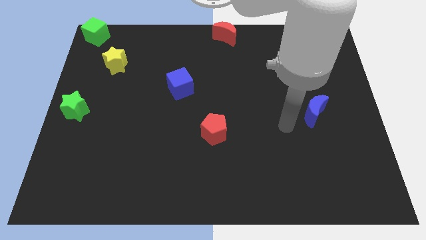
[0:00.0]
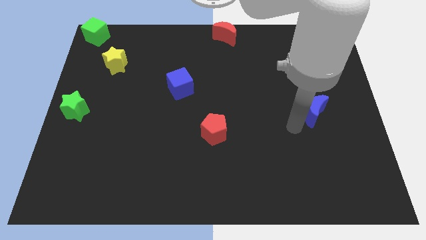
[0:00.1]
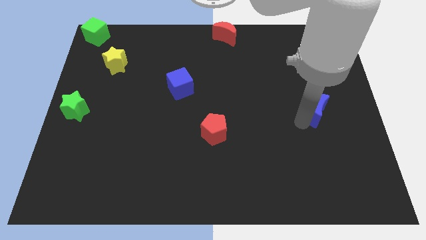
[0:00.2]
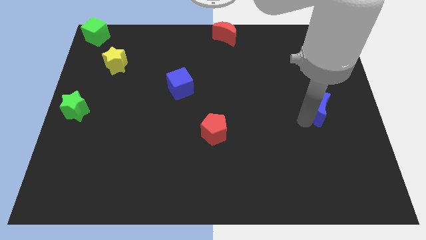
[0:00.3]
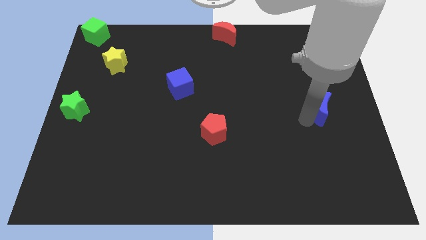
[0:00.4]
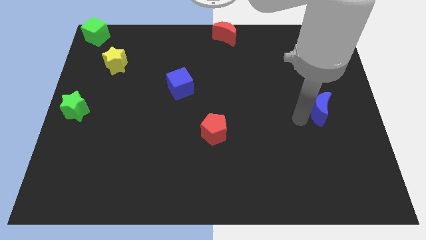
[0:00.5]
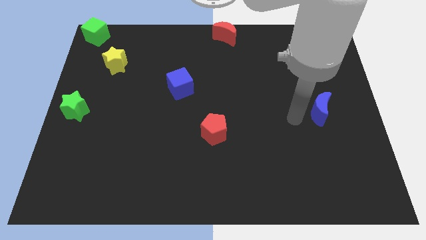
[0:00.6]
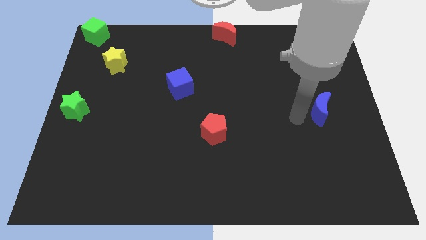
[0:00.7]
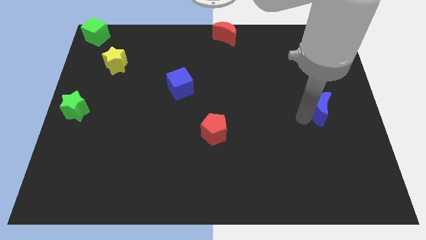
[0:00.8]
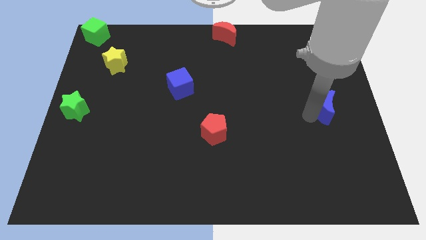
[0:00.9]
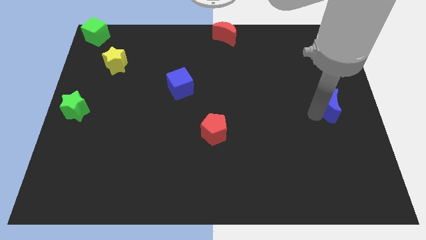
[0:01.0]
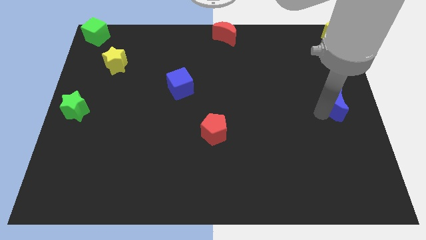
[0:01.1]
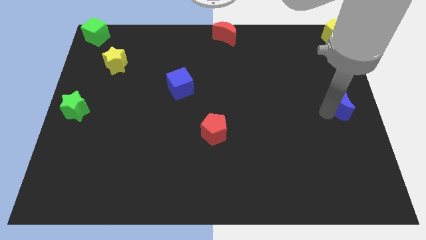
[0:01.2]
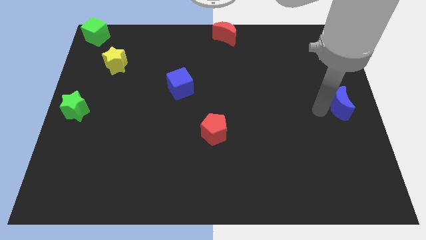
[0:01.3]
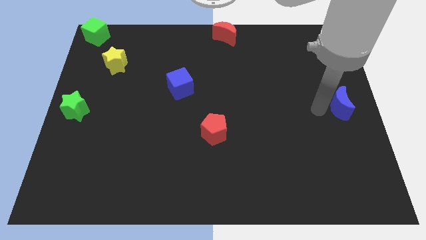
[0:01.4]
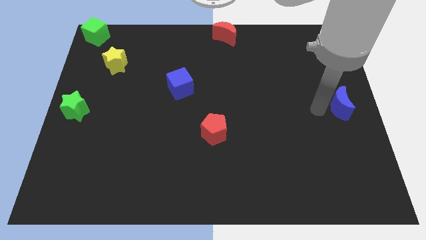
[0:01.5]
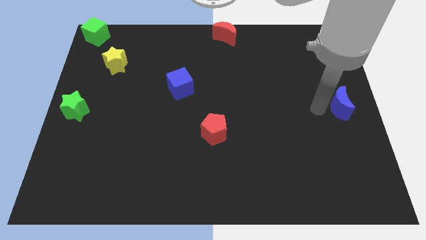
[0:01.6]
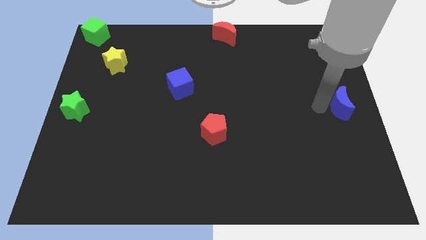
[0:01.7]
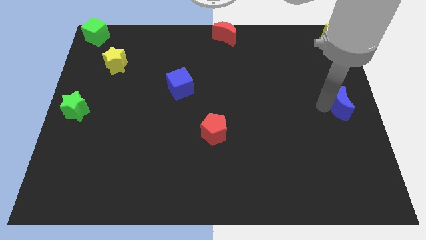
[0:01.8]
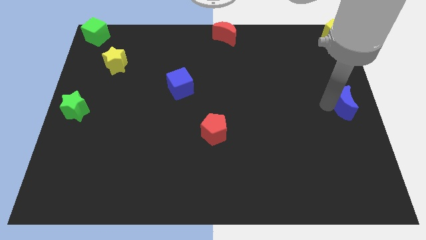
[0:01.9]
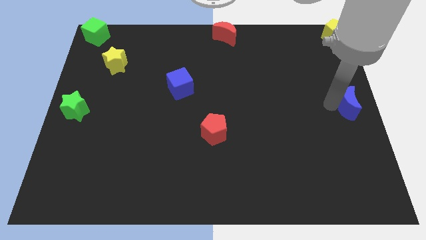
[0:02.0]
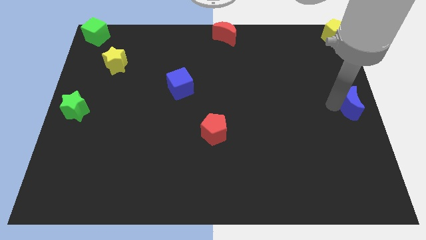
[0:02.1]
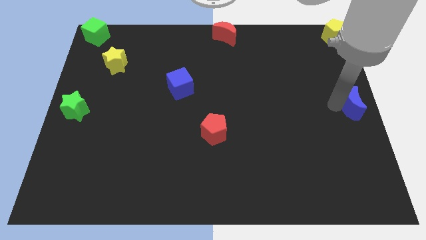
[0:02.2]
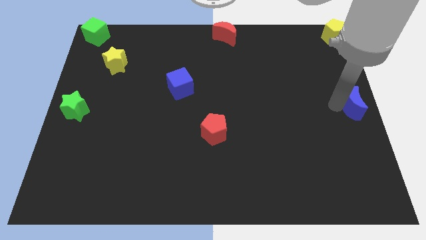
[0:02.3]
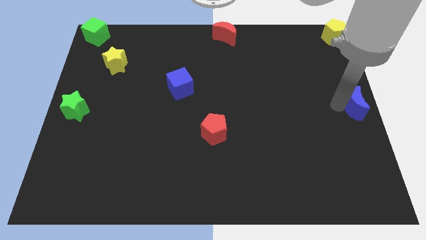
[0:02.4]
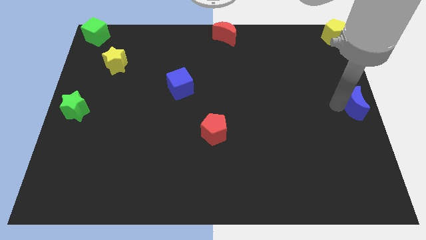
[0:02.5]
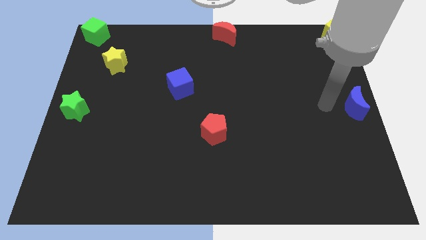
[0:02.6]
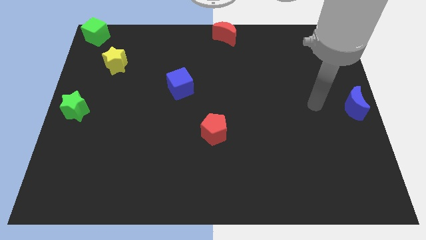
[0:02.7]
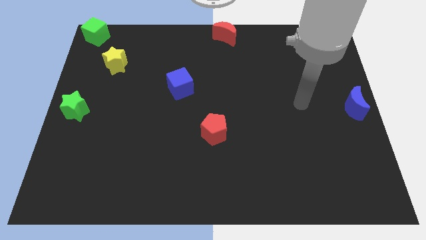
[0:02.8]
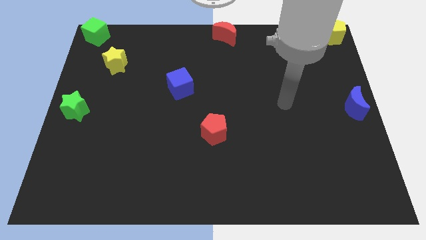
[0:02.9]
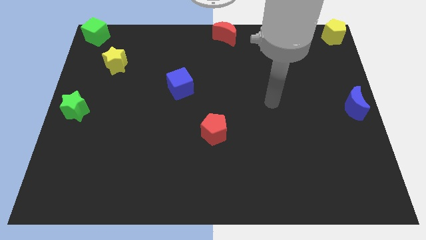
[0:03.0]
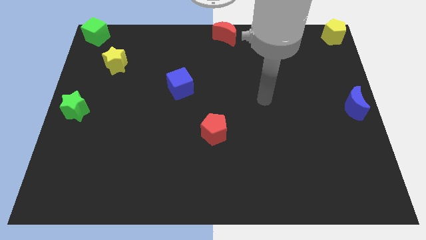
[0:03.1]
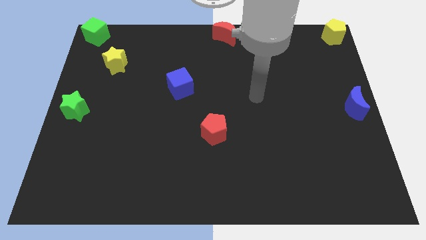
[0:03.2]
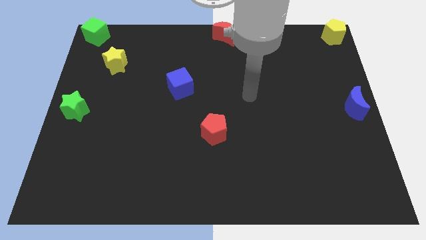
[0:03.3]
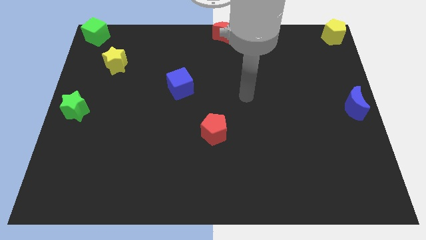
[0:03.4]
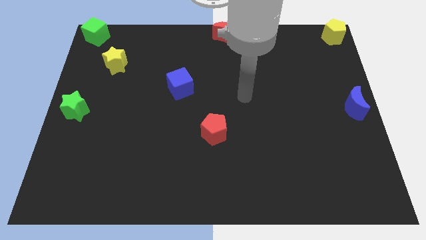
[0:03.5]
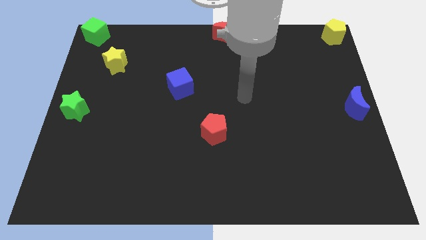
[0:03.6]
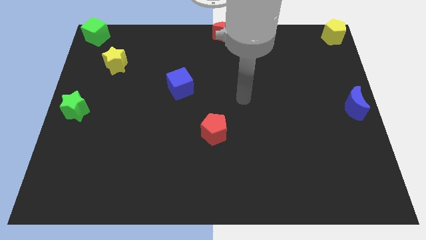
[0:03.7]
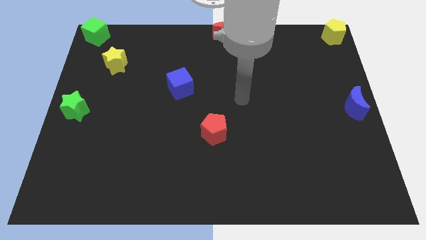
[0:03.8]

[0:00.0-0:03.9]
place the blue crescent at the center right side of the board

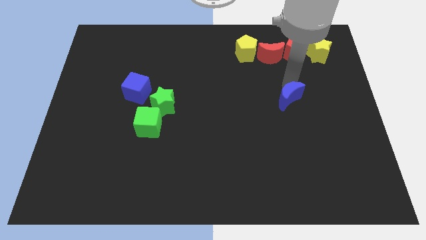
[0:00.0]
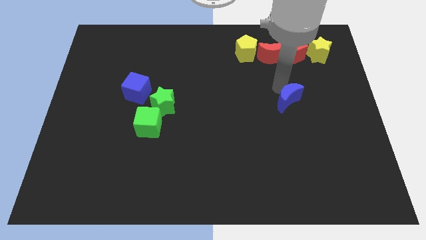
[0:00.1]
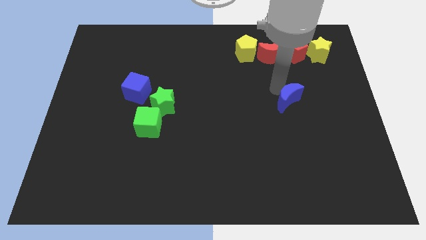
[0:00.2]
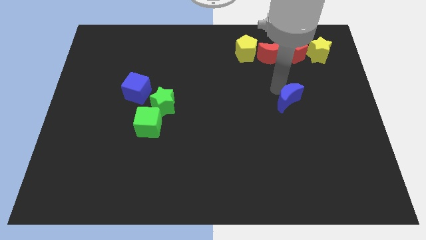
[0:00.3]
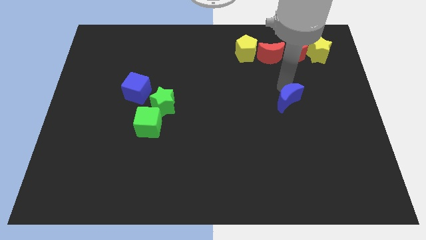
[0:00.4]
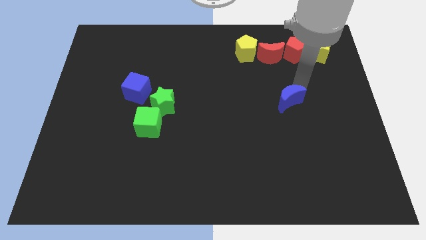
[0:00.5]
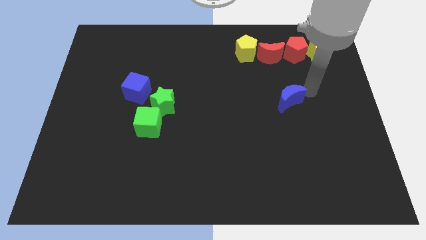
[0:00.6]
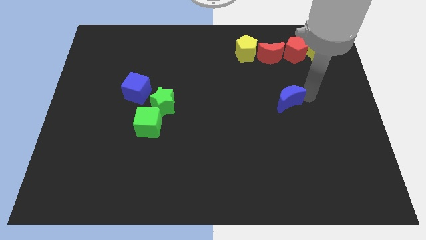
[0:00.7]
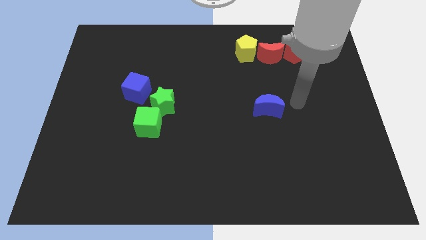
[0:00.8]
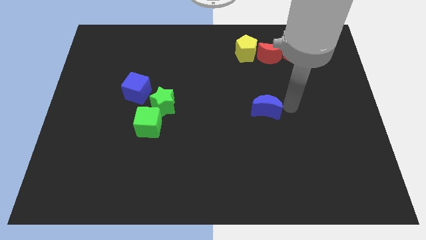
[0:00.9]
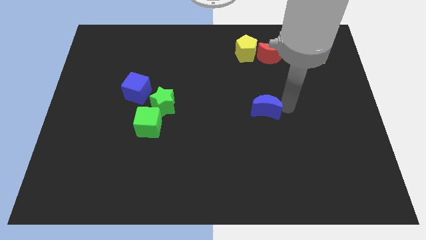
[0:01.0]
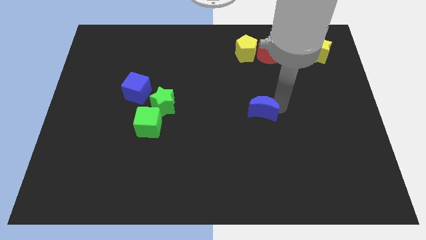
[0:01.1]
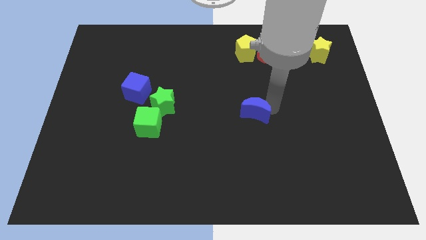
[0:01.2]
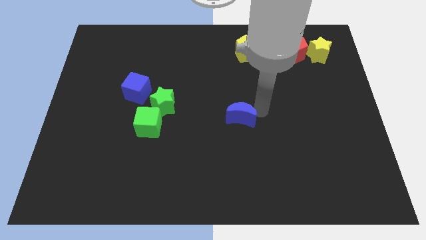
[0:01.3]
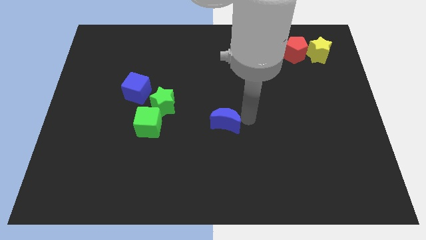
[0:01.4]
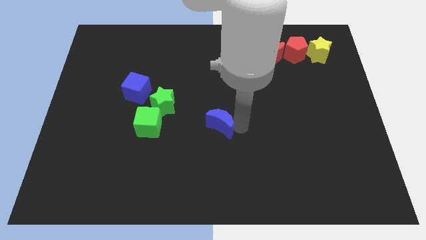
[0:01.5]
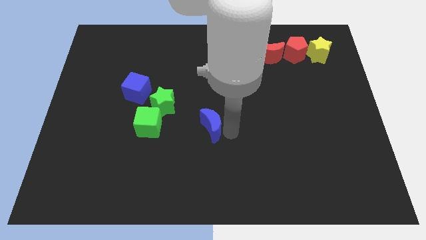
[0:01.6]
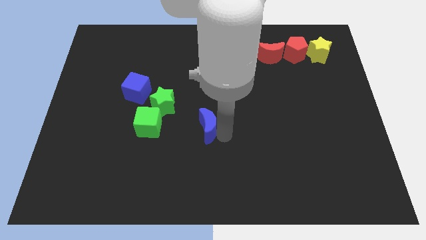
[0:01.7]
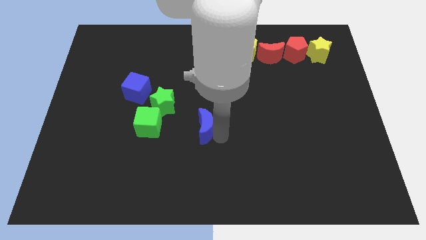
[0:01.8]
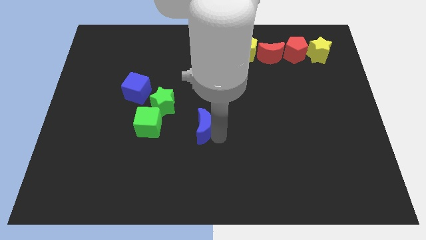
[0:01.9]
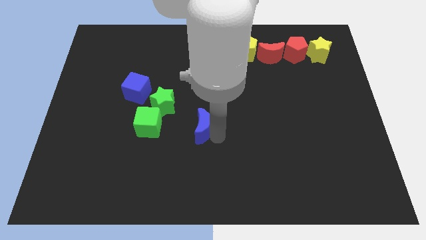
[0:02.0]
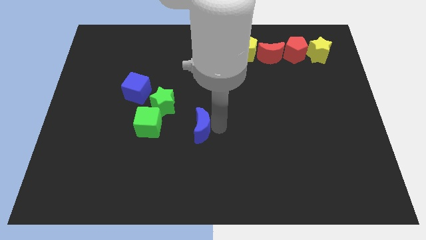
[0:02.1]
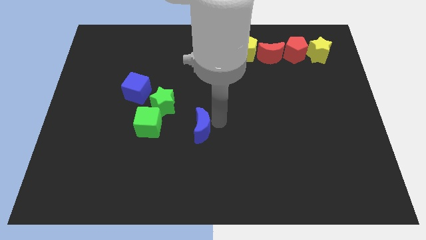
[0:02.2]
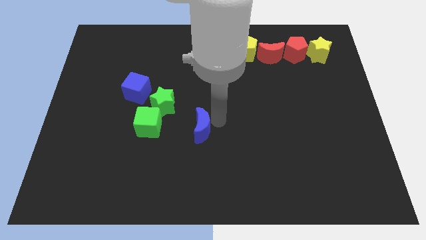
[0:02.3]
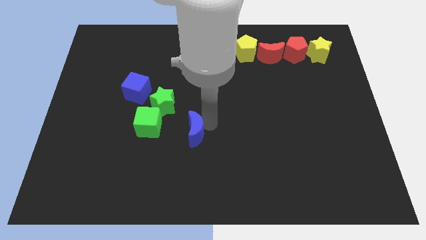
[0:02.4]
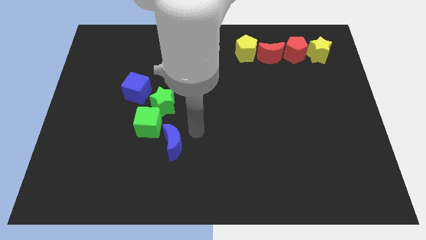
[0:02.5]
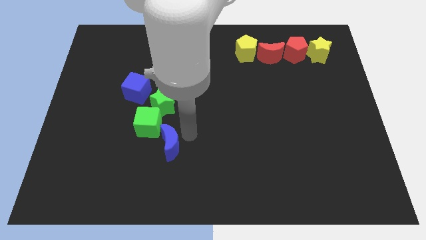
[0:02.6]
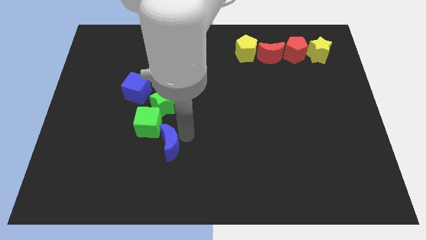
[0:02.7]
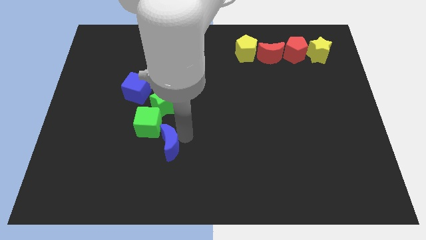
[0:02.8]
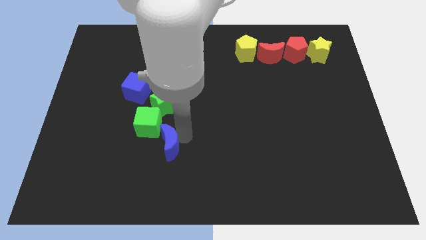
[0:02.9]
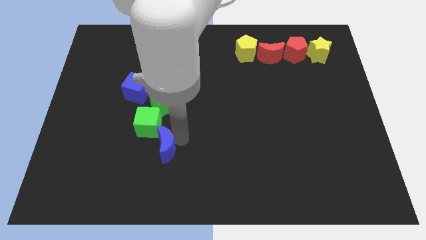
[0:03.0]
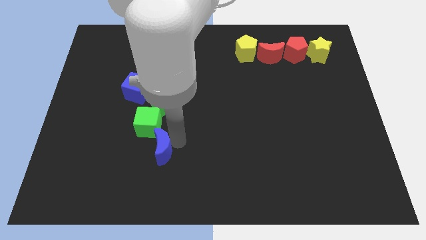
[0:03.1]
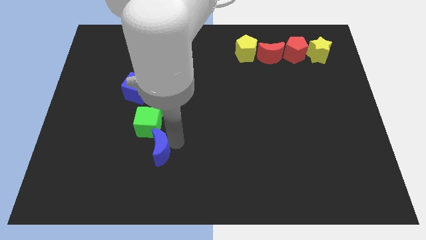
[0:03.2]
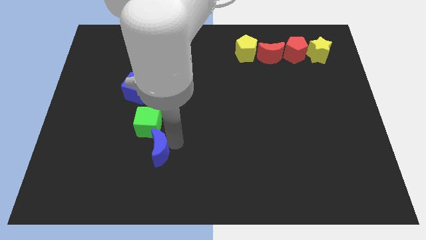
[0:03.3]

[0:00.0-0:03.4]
place blue moon below green cube

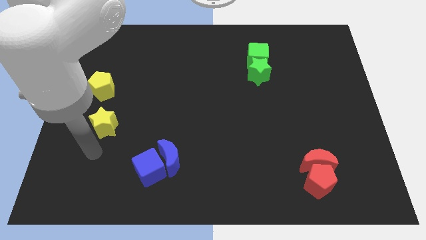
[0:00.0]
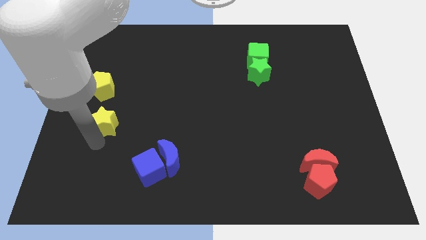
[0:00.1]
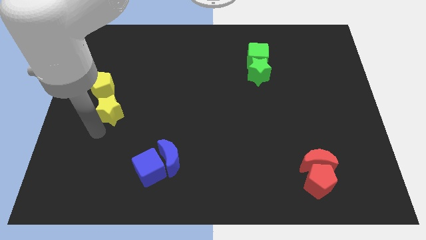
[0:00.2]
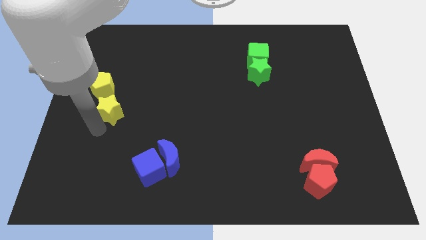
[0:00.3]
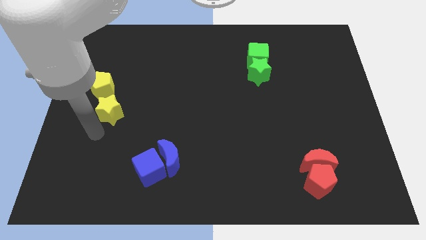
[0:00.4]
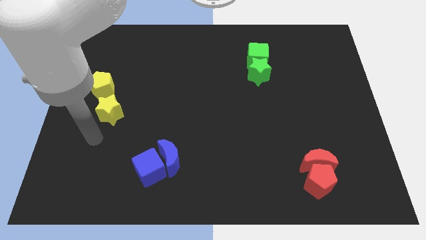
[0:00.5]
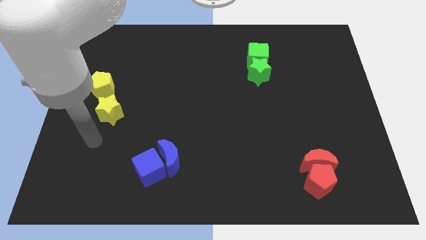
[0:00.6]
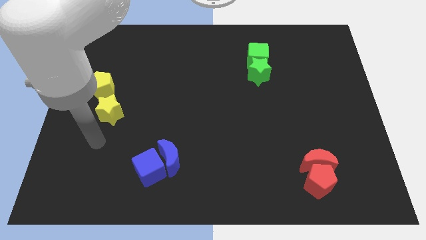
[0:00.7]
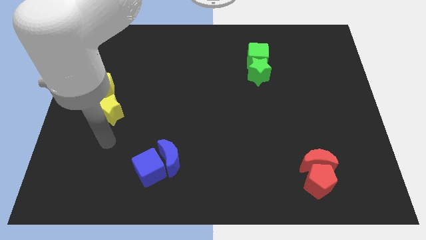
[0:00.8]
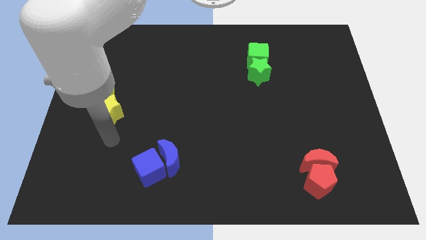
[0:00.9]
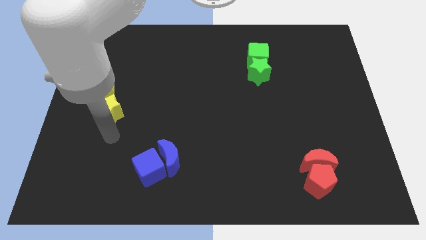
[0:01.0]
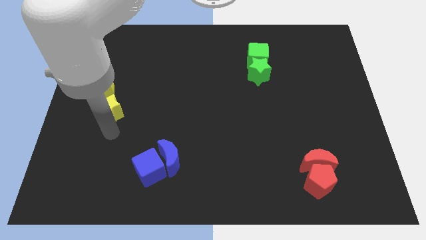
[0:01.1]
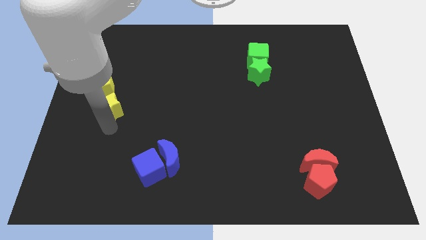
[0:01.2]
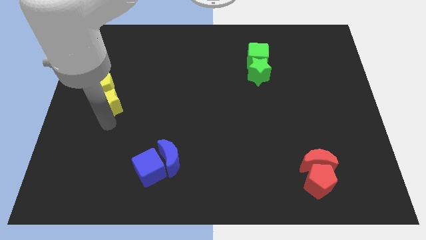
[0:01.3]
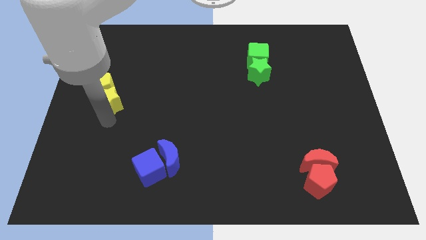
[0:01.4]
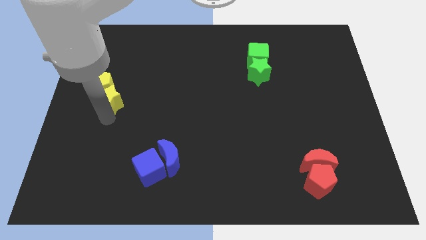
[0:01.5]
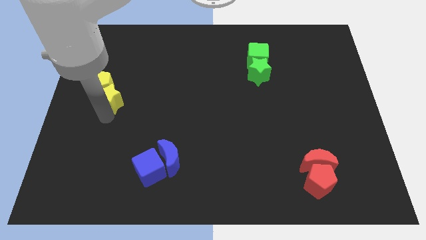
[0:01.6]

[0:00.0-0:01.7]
push the yellow star into the yellow pentagon to the center left

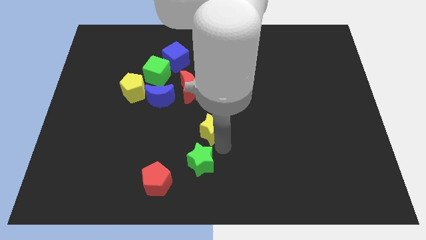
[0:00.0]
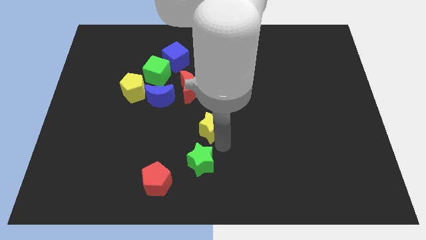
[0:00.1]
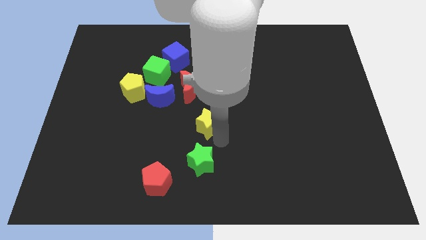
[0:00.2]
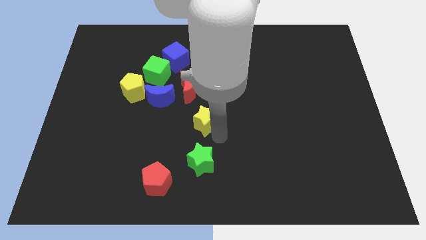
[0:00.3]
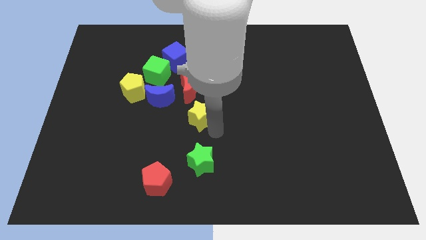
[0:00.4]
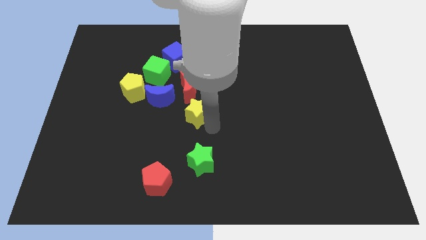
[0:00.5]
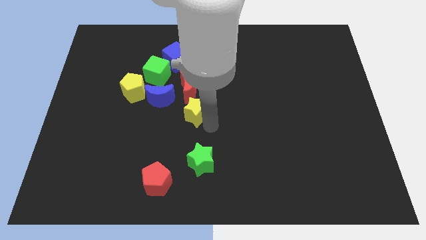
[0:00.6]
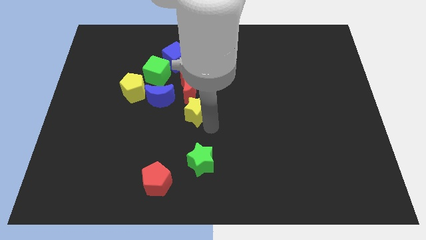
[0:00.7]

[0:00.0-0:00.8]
push the yellow star to the bottom of the red crescent
